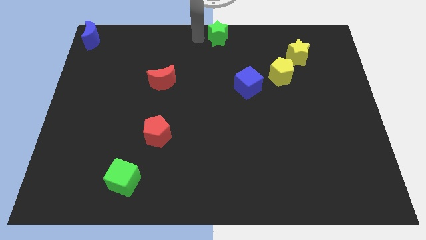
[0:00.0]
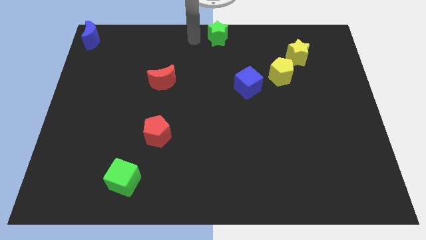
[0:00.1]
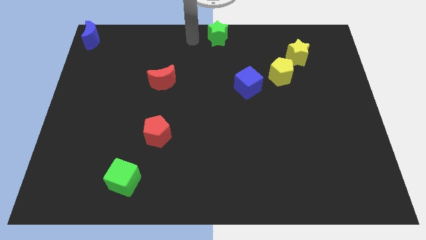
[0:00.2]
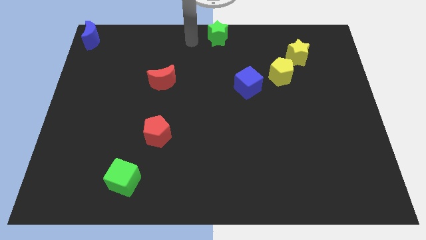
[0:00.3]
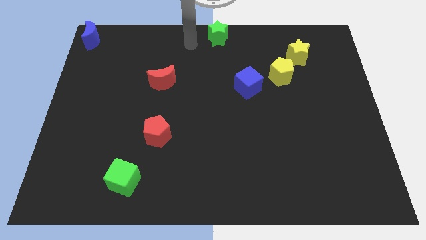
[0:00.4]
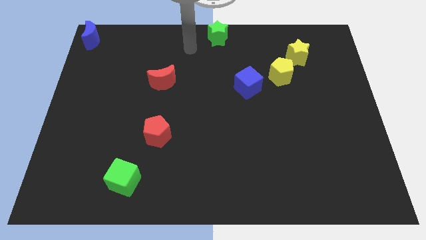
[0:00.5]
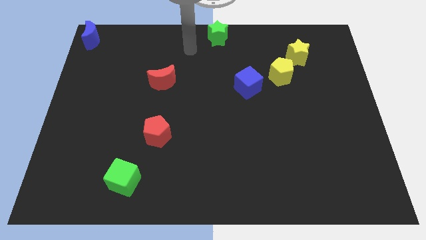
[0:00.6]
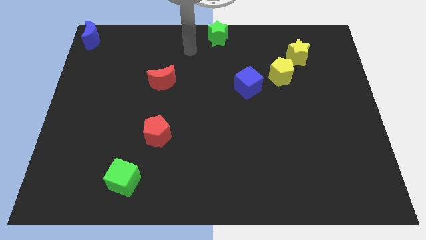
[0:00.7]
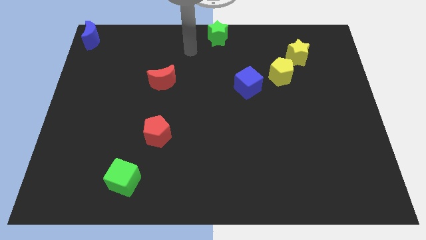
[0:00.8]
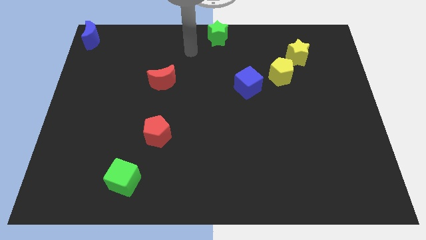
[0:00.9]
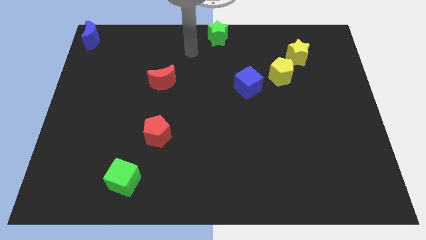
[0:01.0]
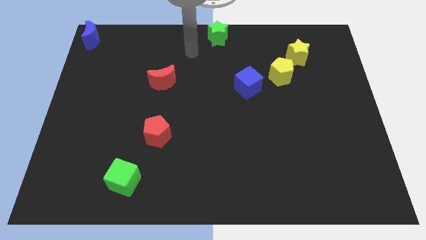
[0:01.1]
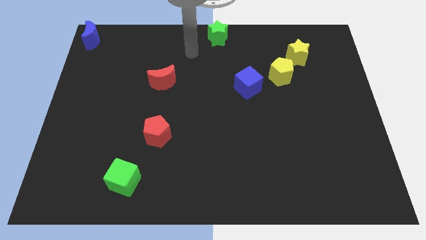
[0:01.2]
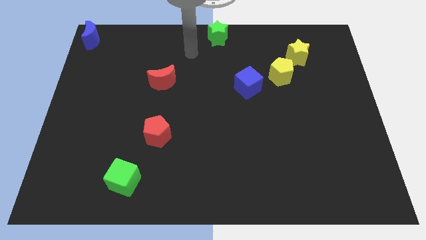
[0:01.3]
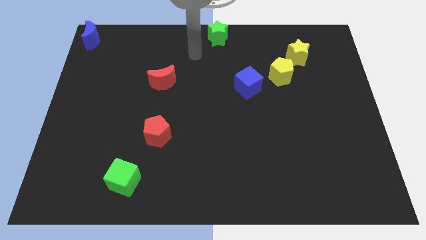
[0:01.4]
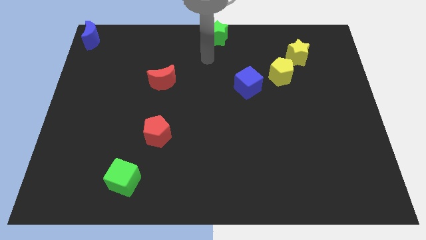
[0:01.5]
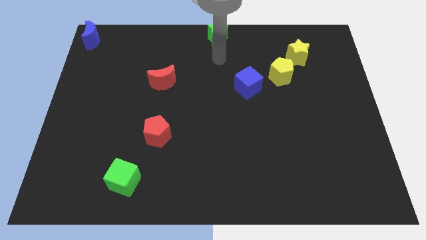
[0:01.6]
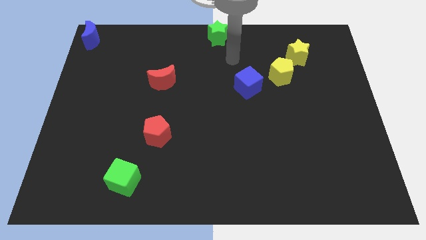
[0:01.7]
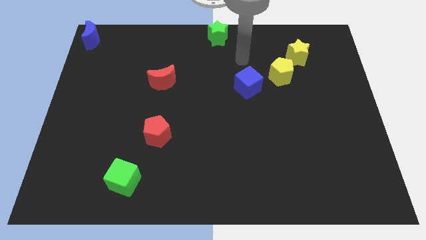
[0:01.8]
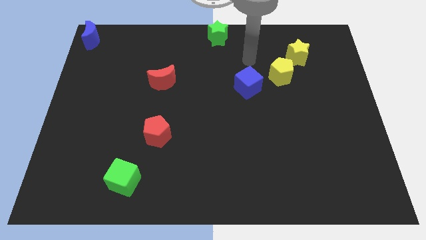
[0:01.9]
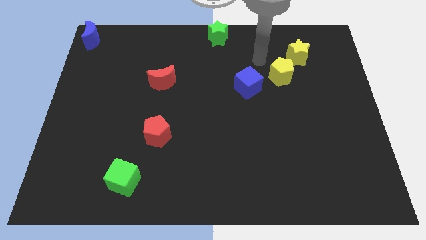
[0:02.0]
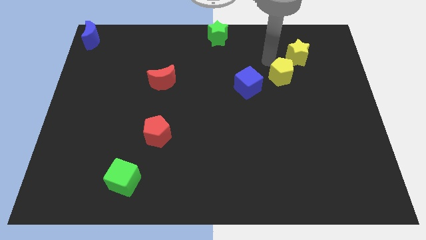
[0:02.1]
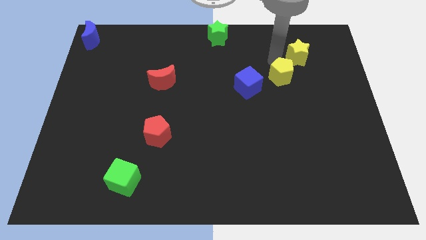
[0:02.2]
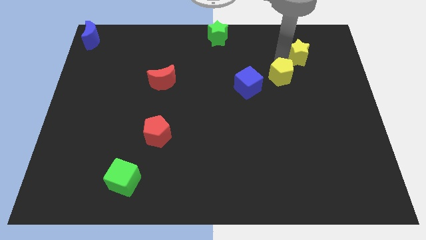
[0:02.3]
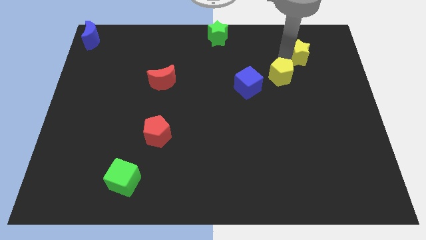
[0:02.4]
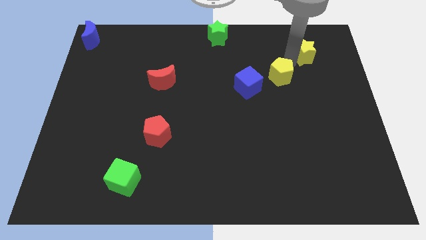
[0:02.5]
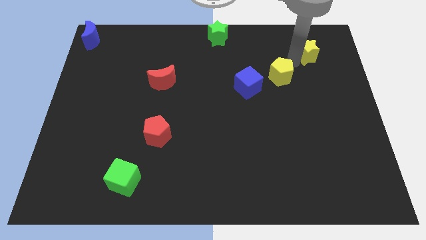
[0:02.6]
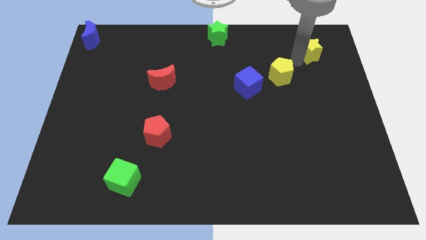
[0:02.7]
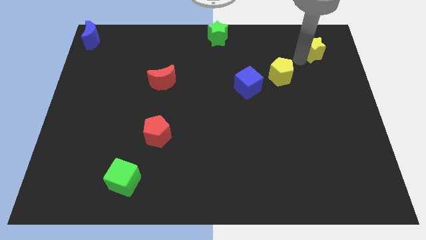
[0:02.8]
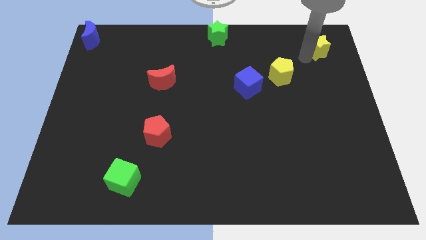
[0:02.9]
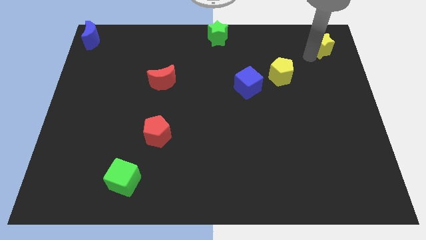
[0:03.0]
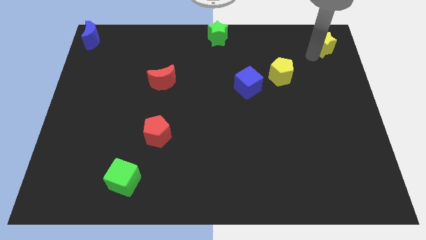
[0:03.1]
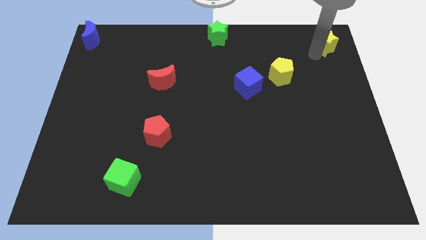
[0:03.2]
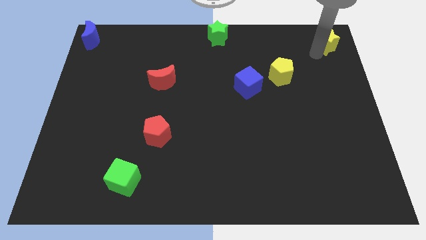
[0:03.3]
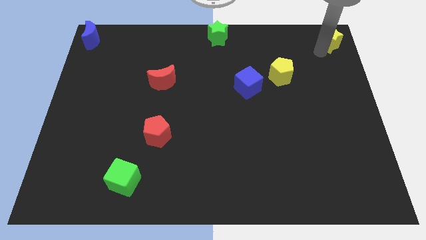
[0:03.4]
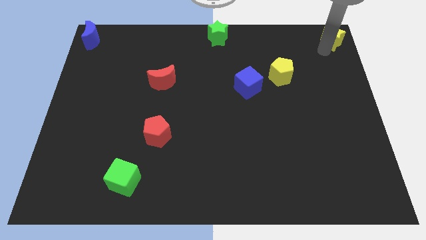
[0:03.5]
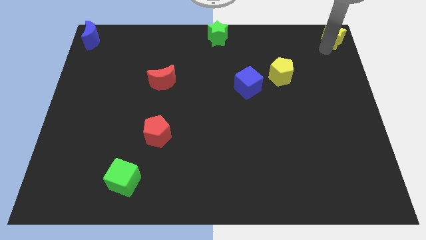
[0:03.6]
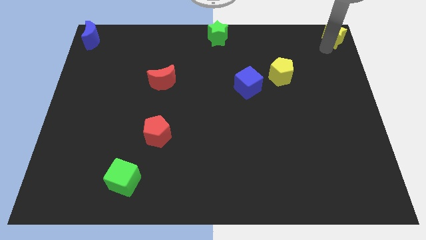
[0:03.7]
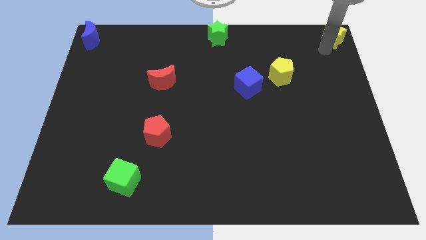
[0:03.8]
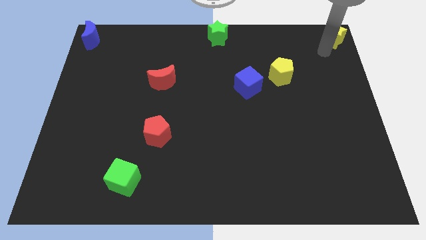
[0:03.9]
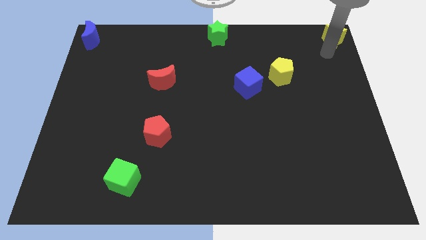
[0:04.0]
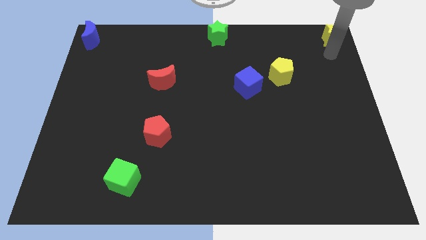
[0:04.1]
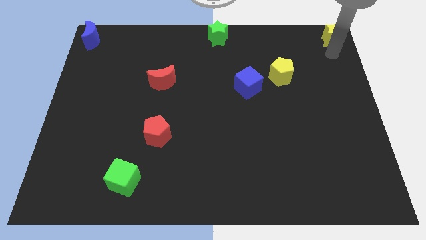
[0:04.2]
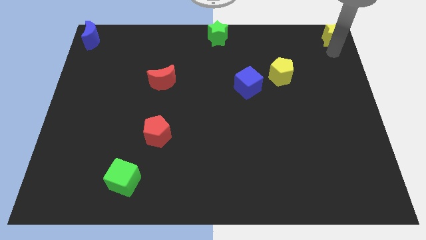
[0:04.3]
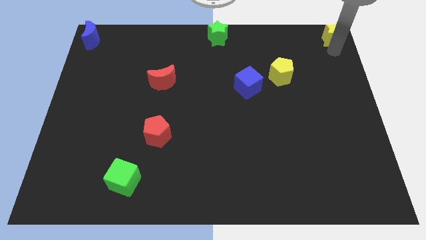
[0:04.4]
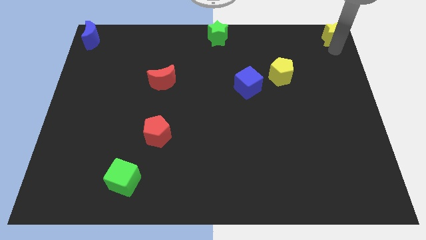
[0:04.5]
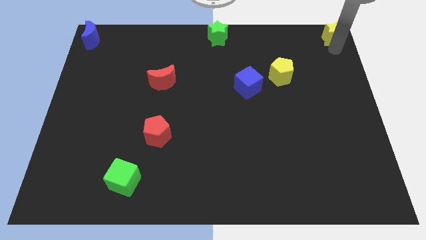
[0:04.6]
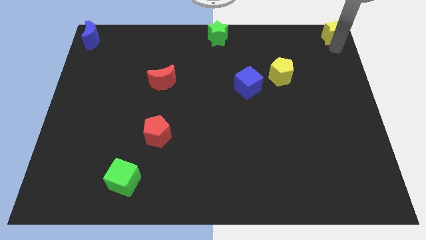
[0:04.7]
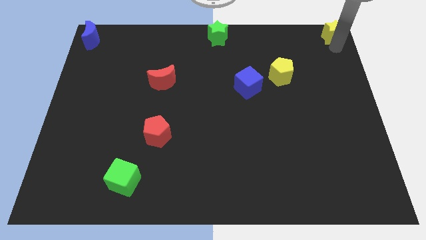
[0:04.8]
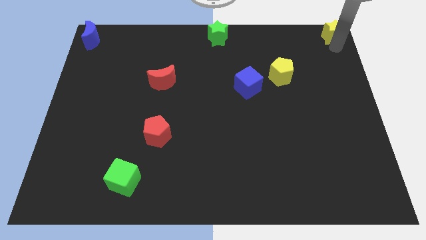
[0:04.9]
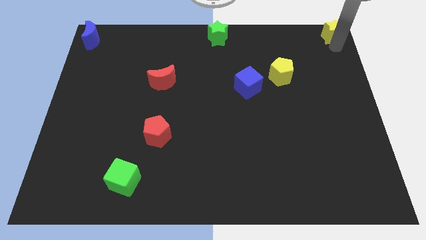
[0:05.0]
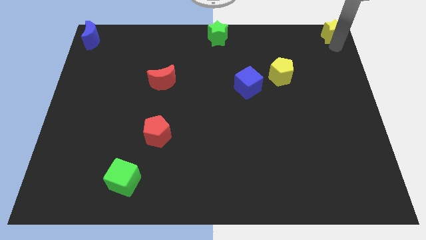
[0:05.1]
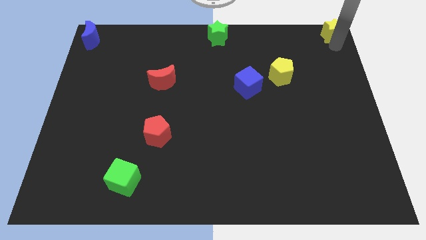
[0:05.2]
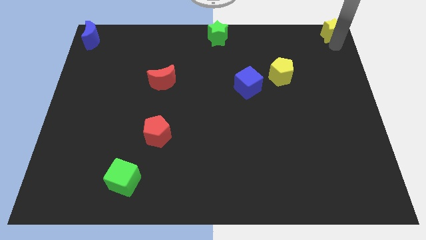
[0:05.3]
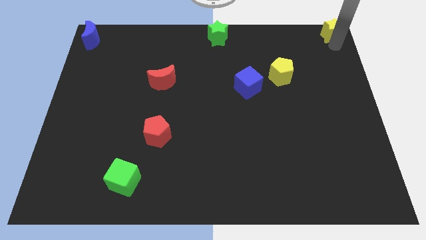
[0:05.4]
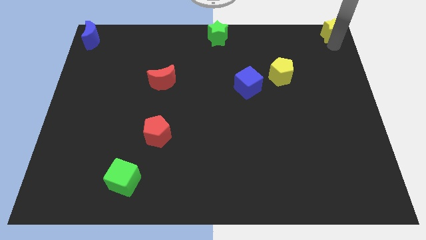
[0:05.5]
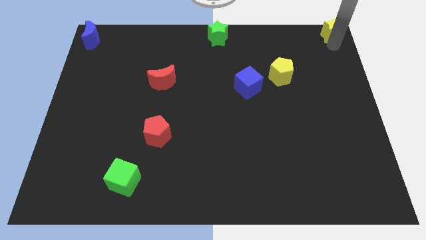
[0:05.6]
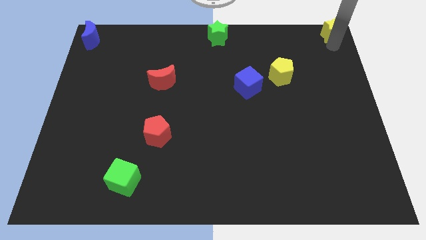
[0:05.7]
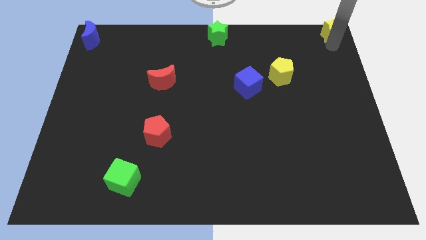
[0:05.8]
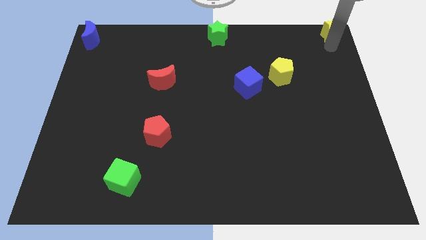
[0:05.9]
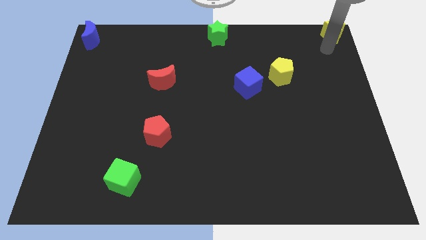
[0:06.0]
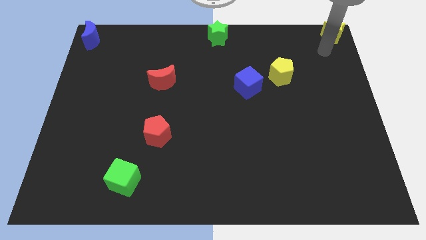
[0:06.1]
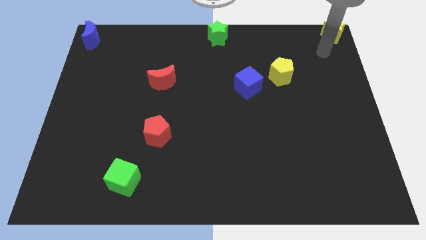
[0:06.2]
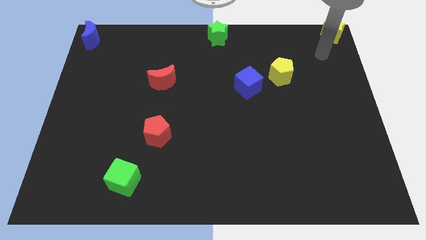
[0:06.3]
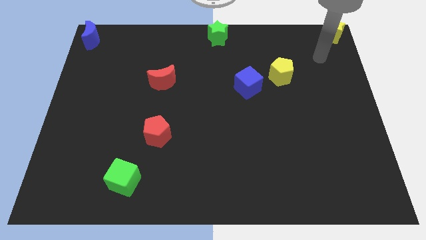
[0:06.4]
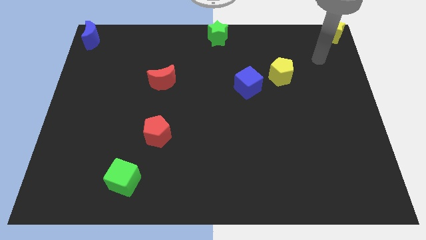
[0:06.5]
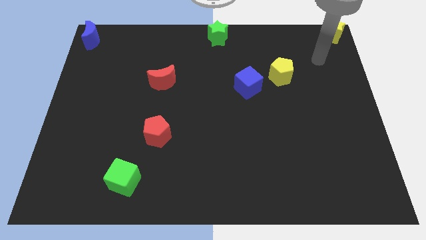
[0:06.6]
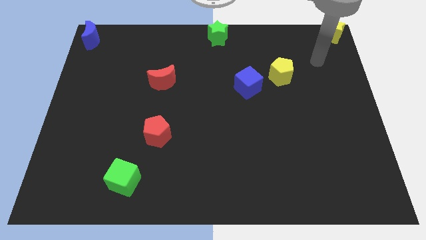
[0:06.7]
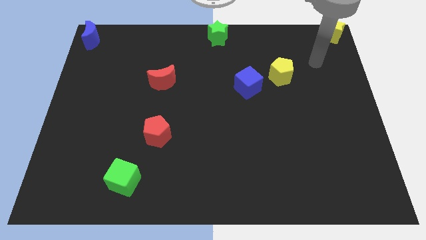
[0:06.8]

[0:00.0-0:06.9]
push the yellow pentagon to the top right to the board

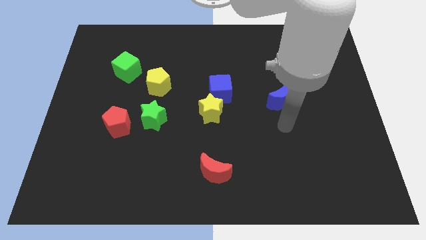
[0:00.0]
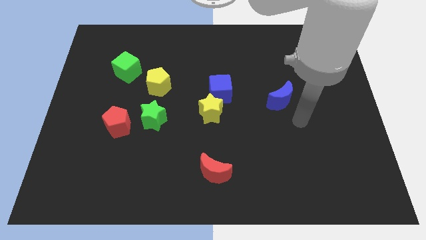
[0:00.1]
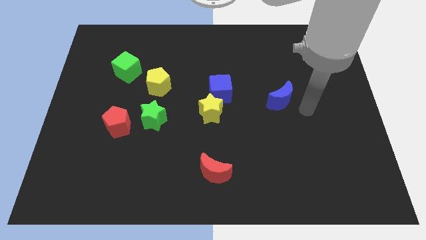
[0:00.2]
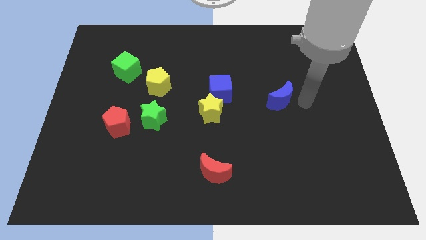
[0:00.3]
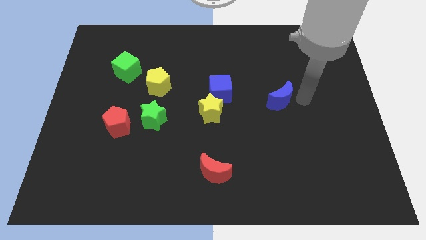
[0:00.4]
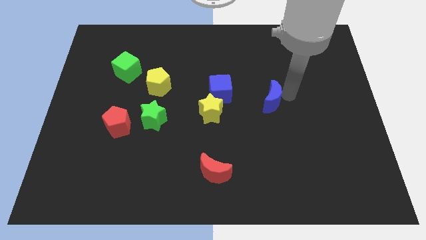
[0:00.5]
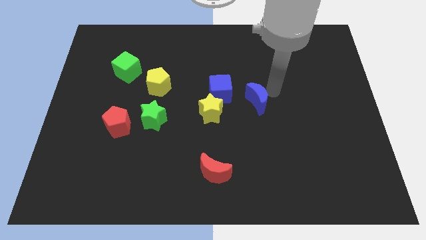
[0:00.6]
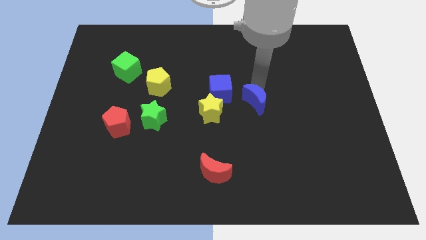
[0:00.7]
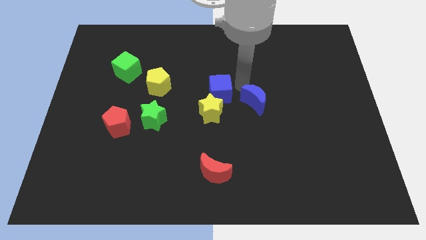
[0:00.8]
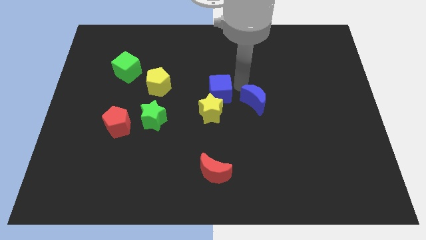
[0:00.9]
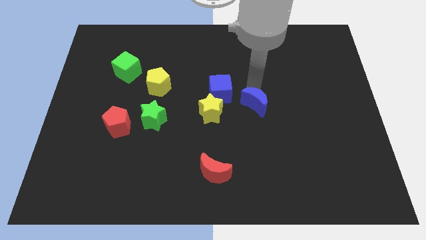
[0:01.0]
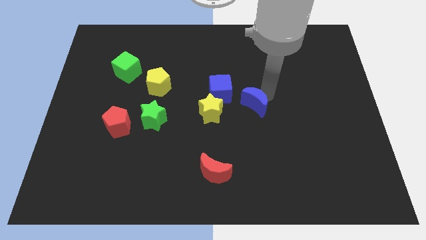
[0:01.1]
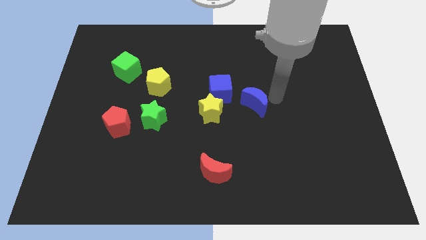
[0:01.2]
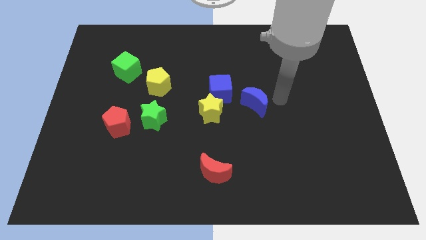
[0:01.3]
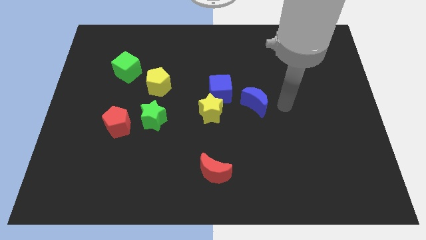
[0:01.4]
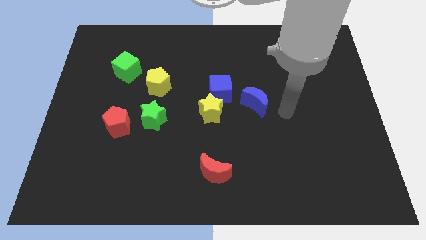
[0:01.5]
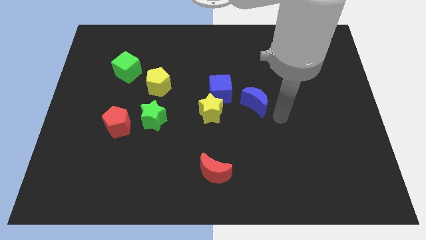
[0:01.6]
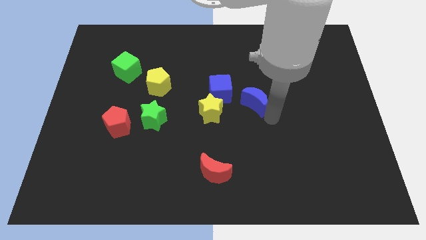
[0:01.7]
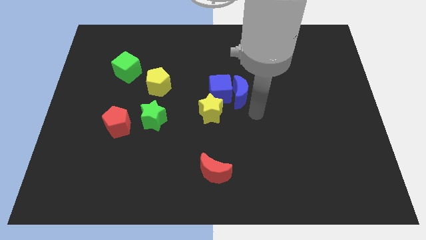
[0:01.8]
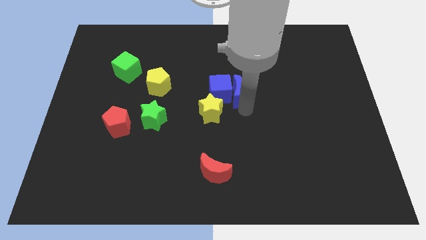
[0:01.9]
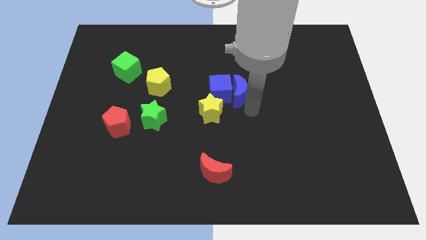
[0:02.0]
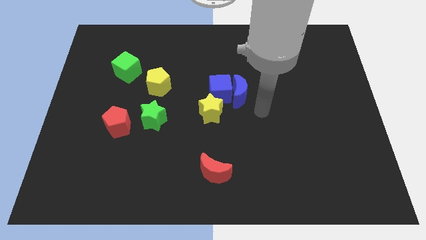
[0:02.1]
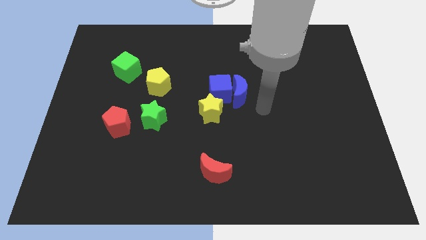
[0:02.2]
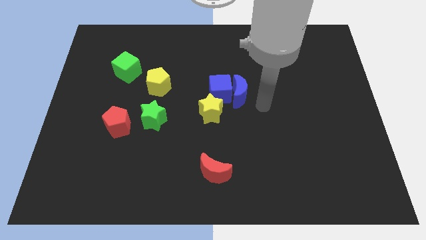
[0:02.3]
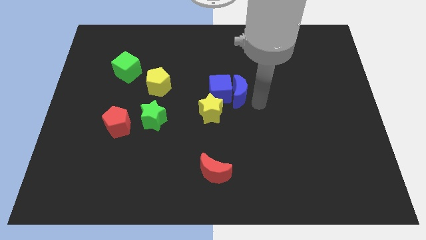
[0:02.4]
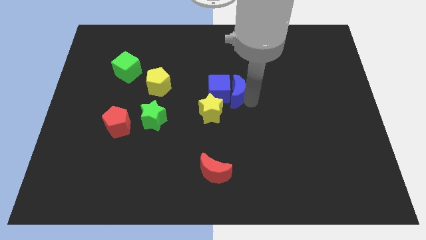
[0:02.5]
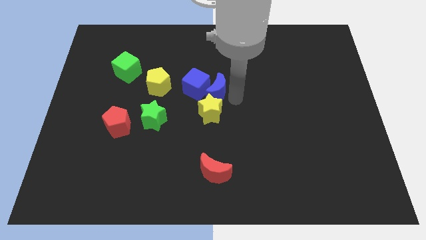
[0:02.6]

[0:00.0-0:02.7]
place the blue moon to the right of the blue cube
